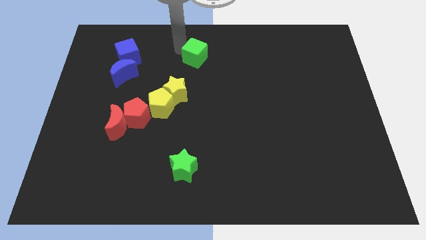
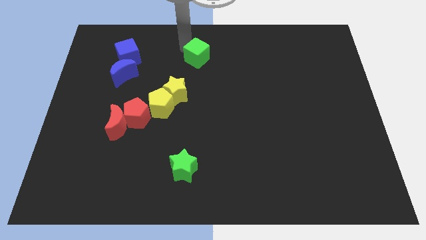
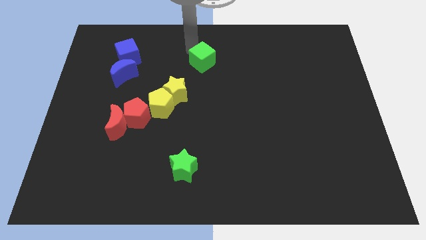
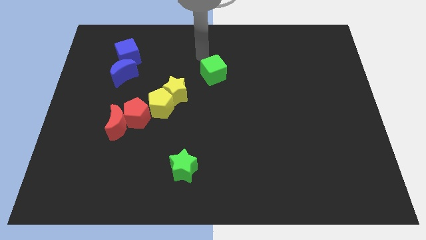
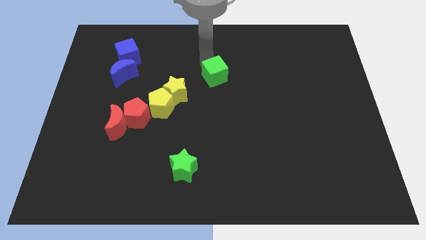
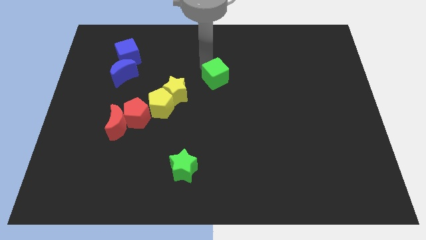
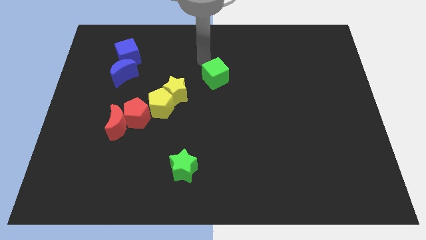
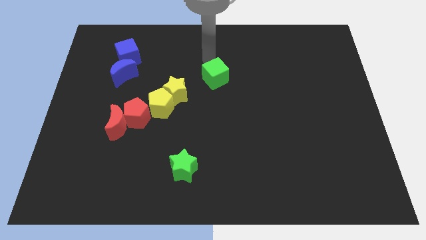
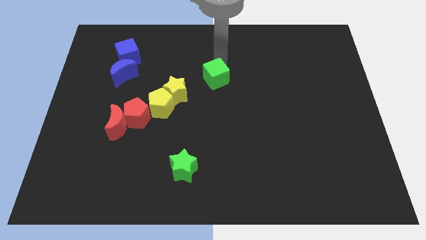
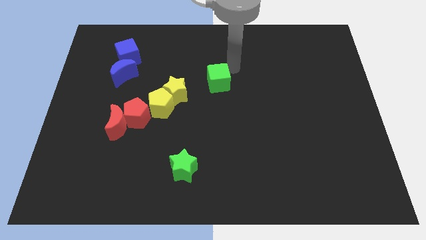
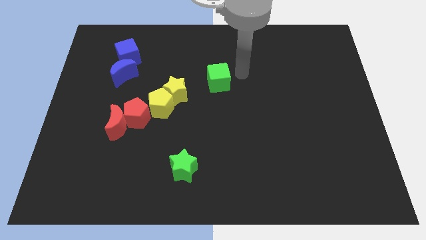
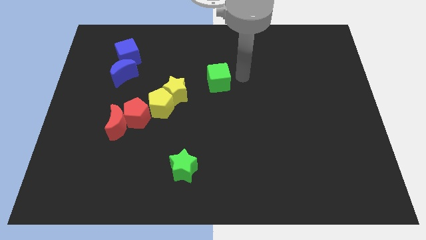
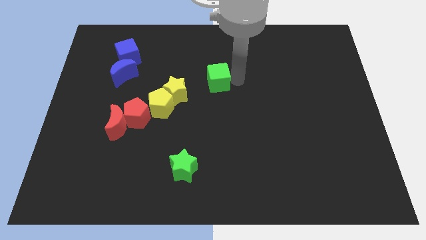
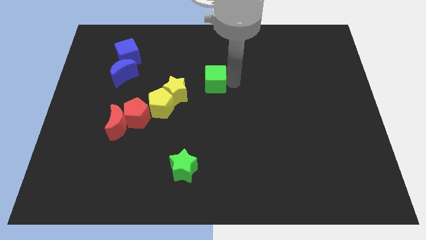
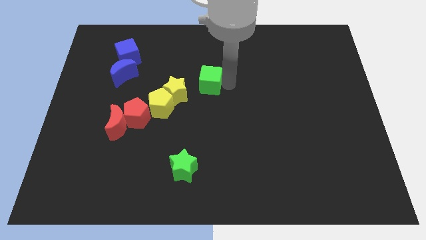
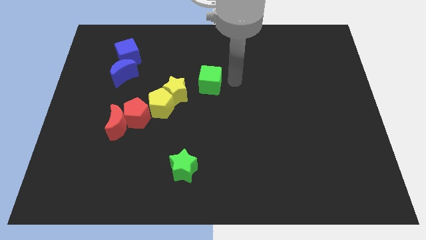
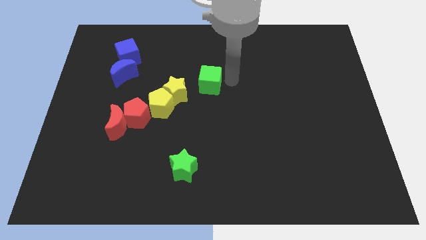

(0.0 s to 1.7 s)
drag the green cube towards the yellow blocks

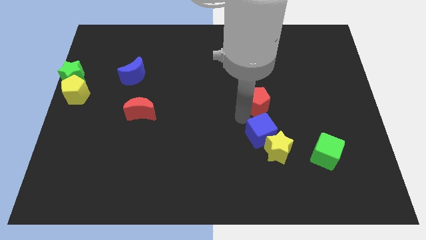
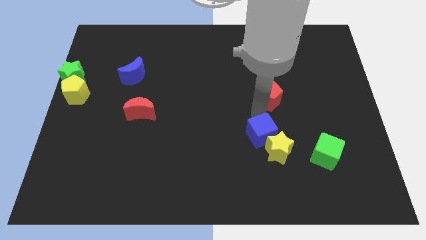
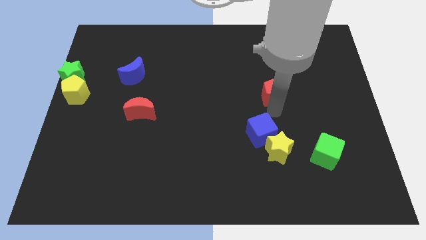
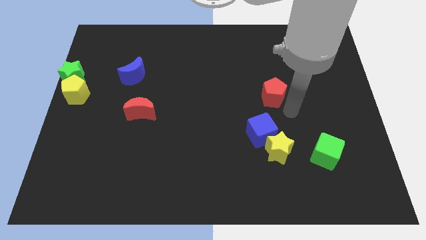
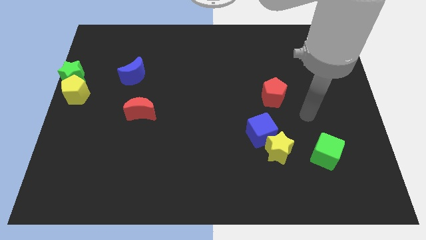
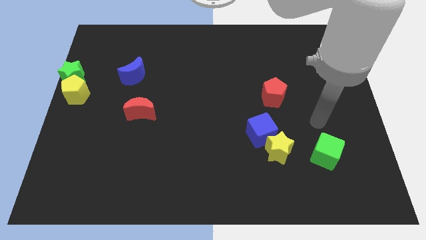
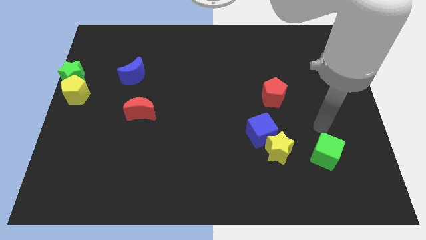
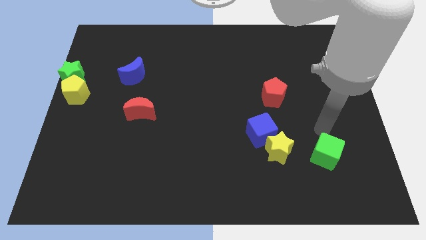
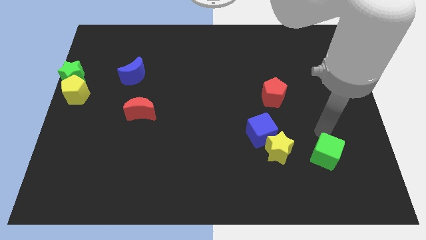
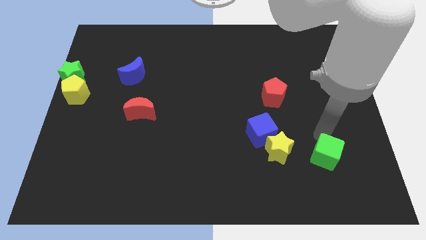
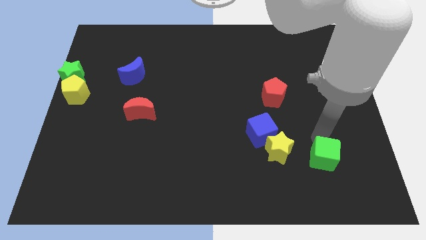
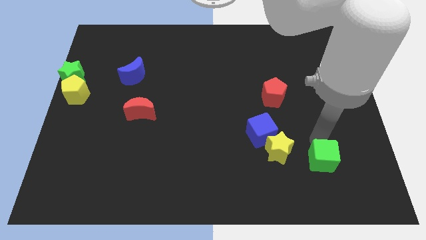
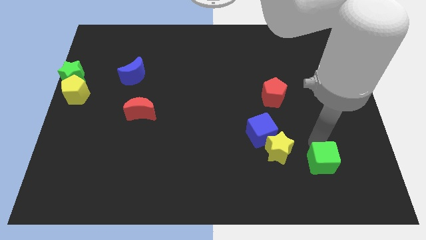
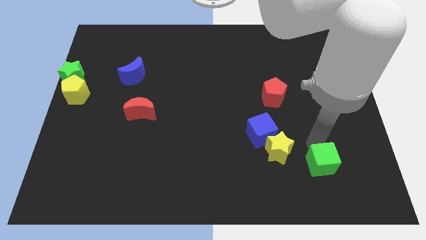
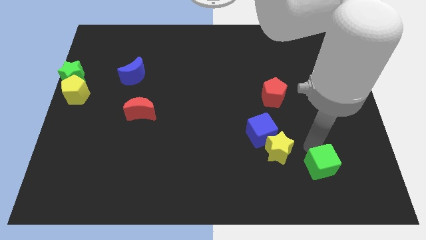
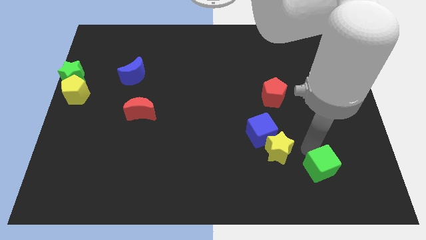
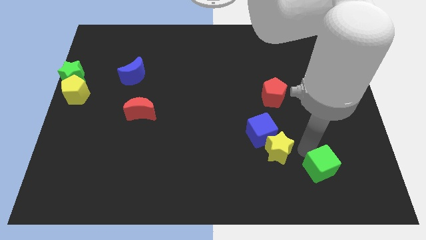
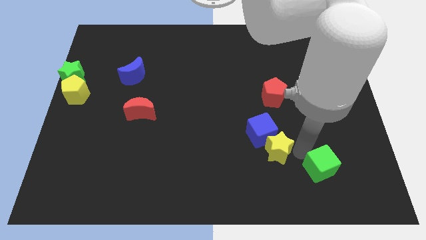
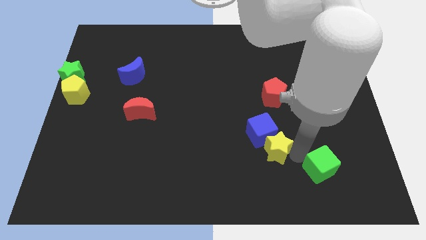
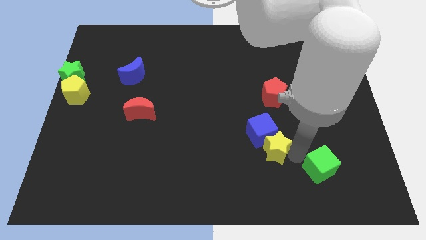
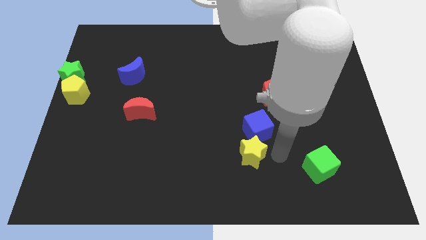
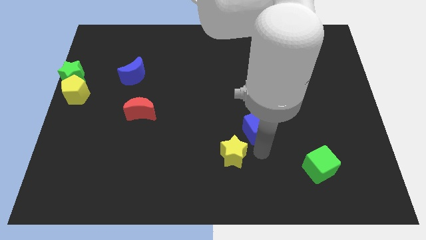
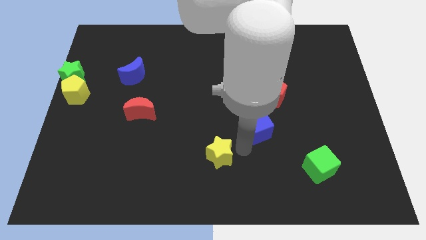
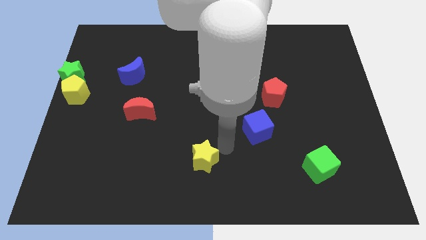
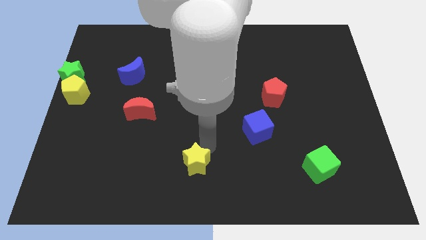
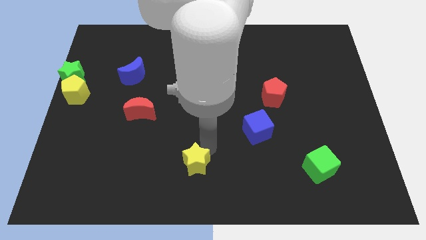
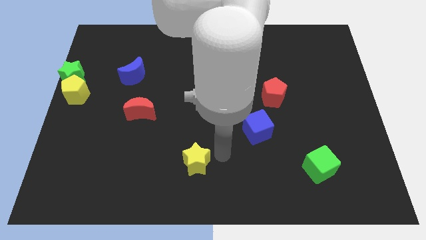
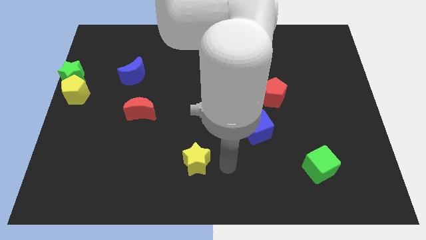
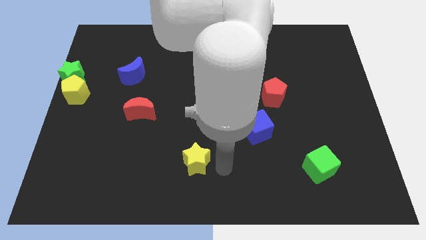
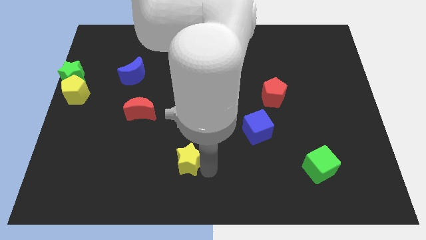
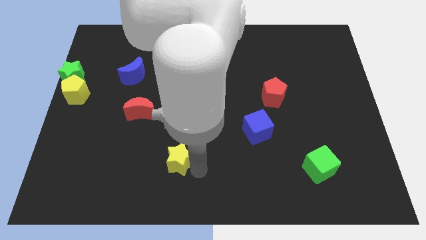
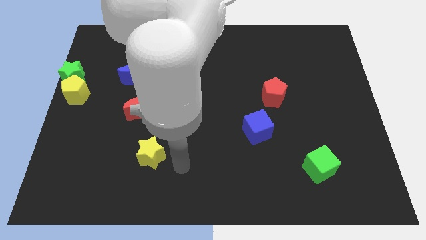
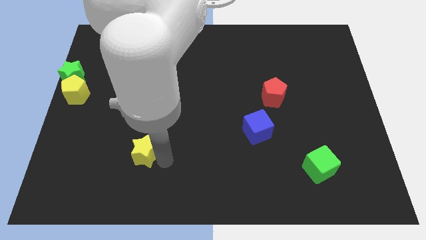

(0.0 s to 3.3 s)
move yellow star below the red moon

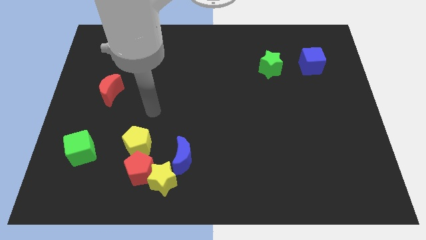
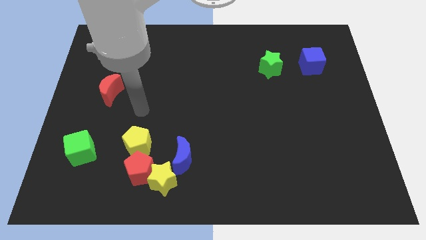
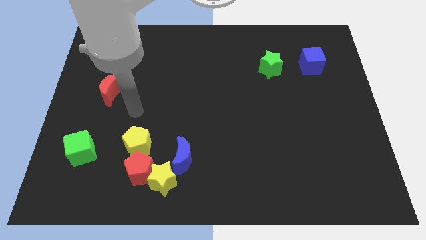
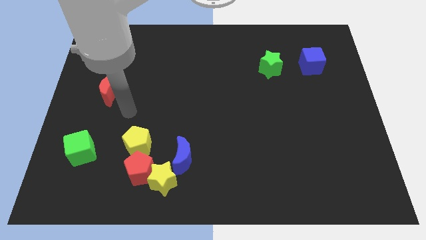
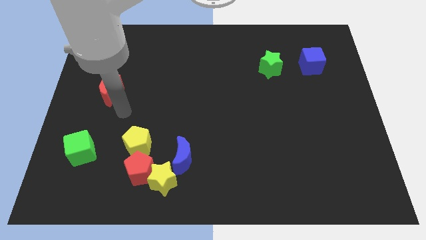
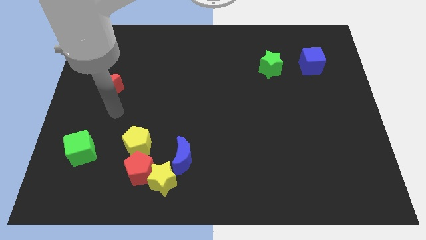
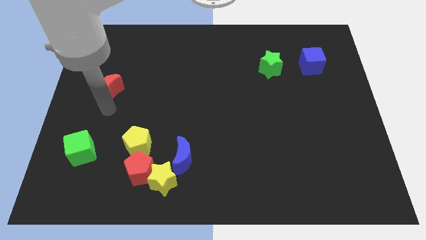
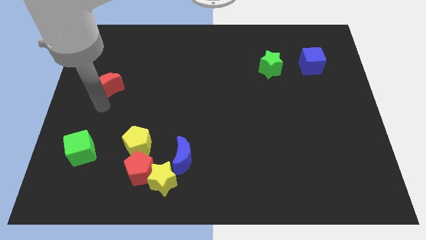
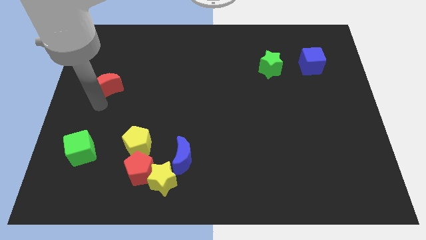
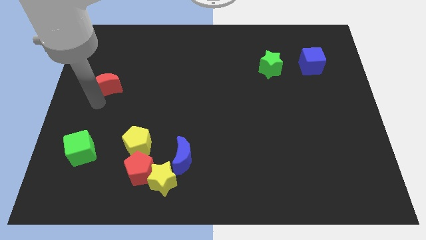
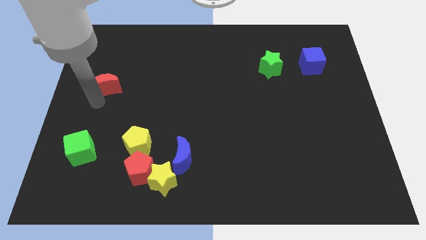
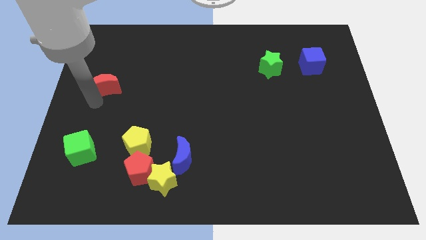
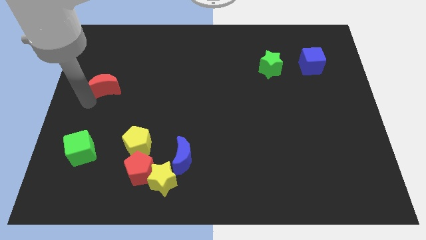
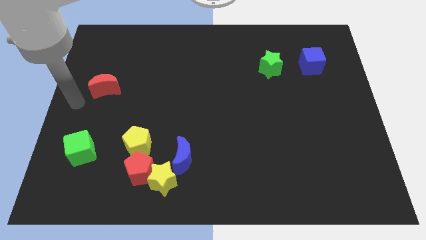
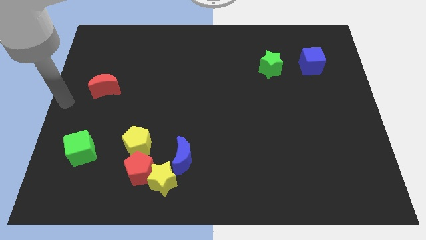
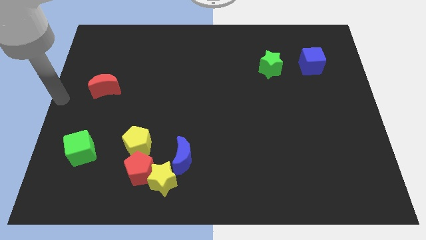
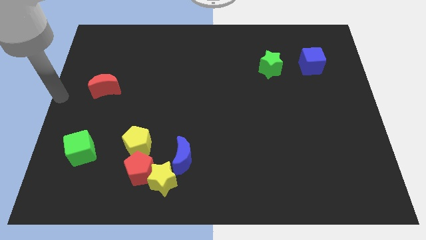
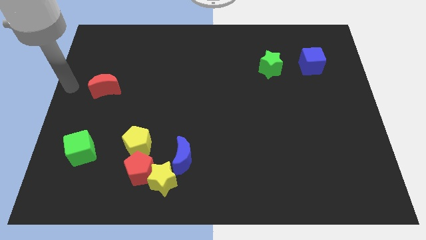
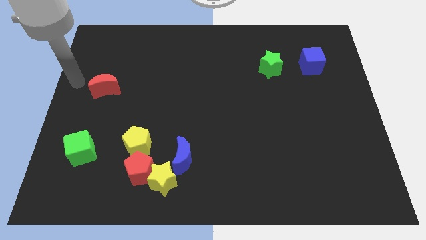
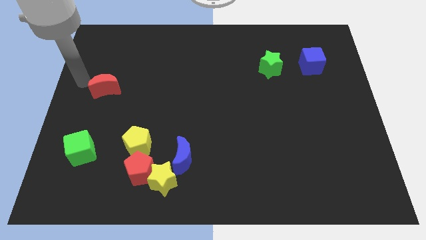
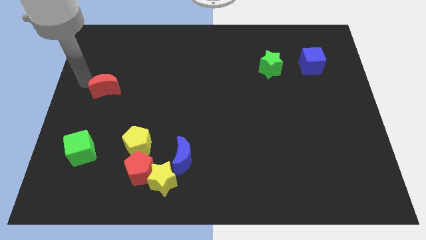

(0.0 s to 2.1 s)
slightly push the red crescent

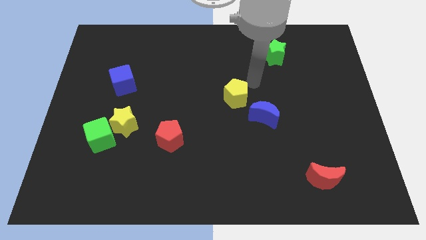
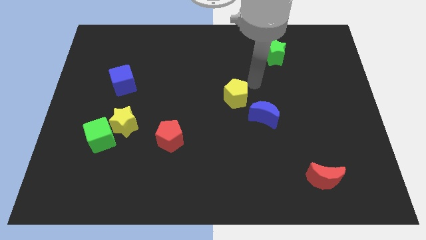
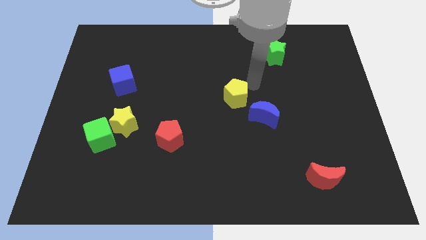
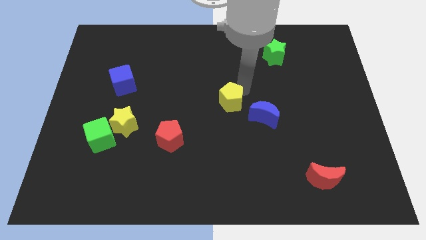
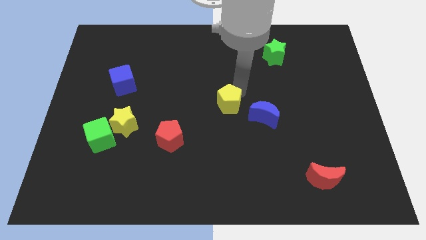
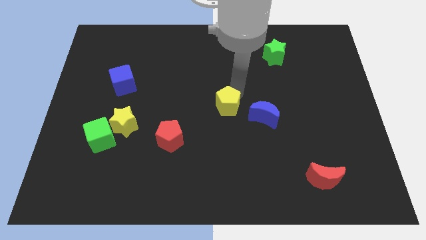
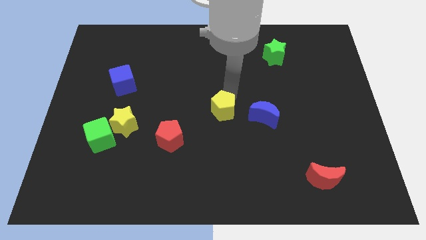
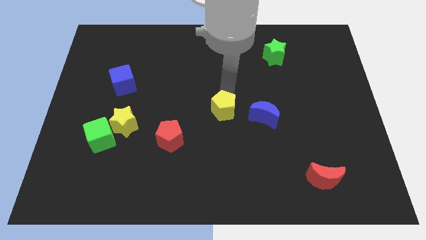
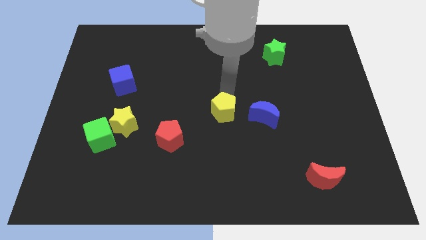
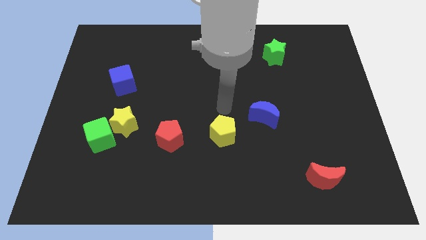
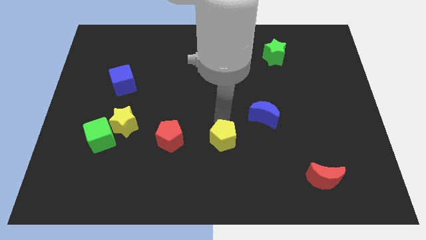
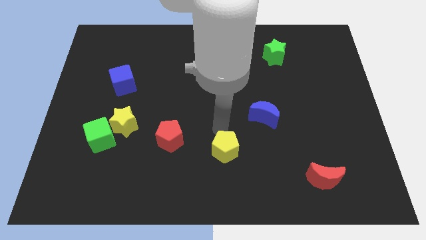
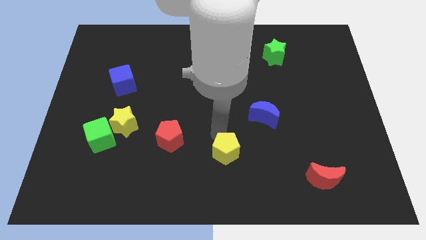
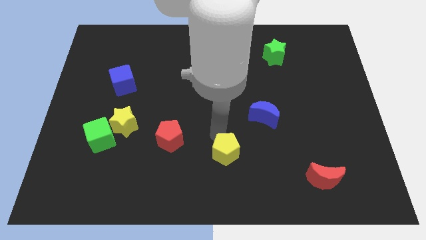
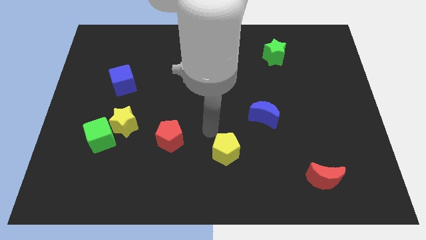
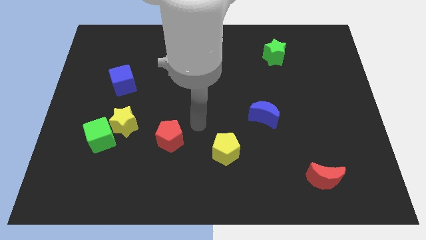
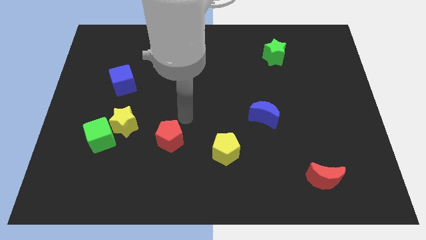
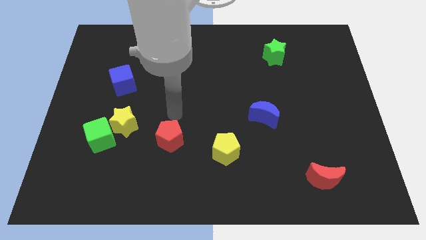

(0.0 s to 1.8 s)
move the yellow pentagon to the bottom left of the blue crescent

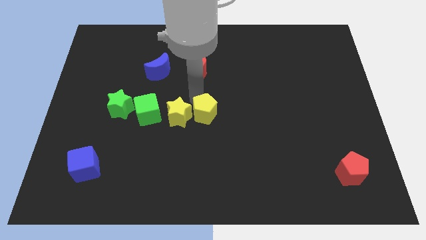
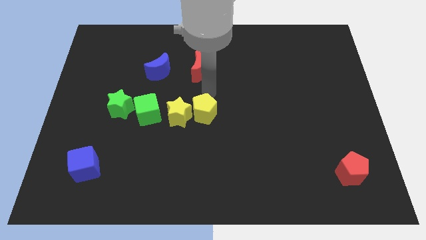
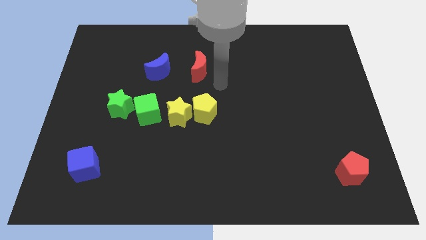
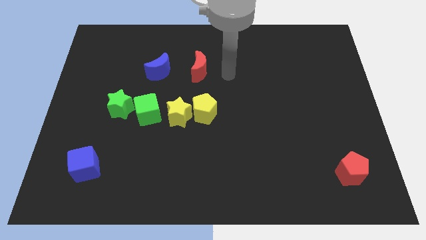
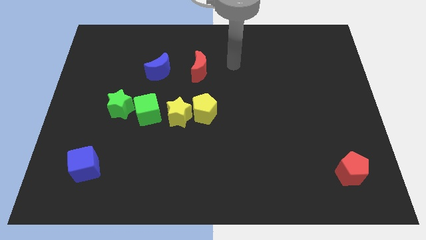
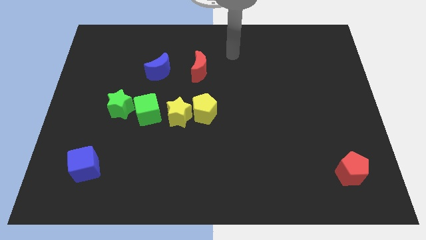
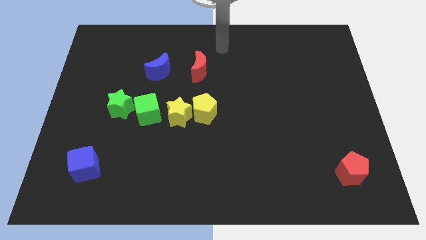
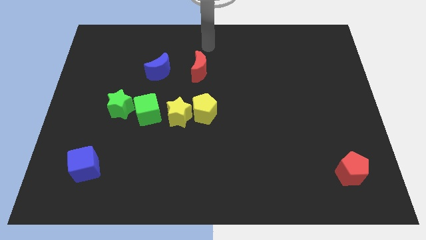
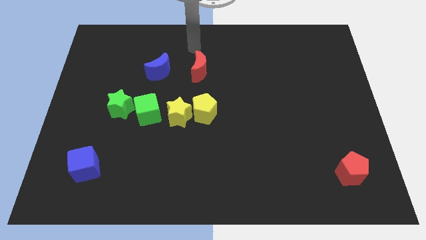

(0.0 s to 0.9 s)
move your arm to the top of red crescent
